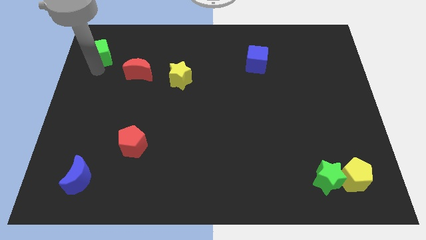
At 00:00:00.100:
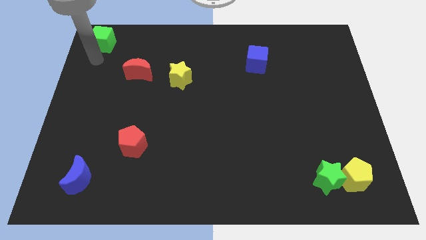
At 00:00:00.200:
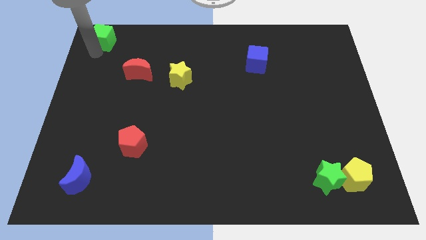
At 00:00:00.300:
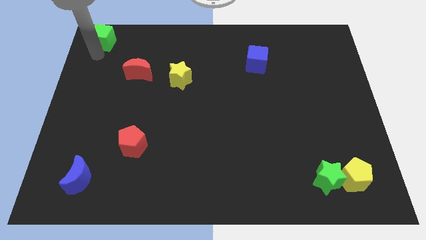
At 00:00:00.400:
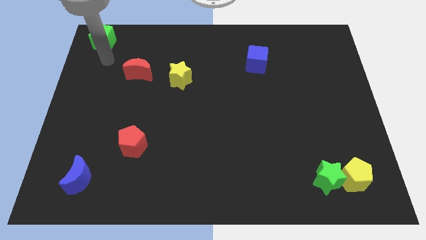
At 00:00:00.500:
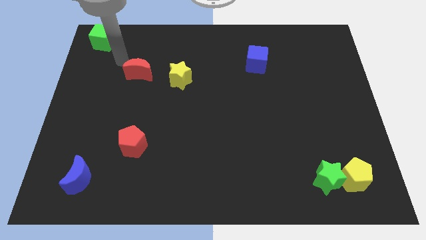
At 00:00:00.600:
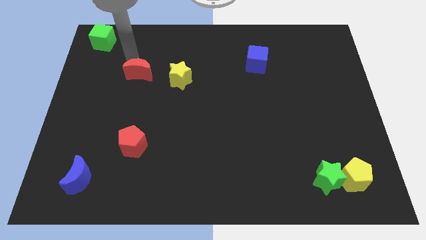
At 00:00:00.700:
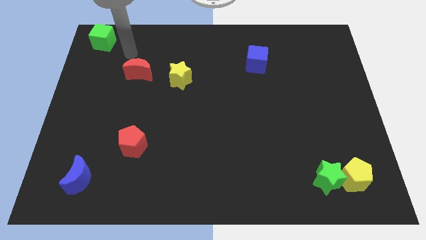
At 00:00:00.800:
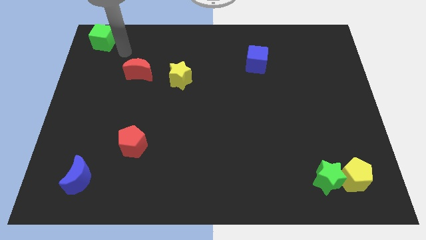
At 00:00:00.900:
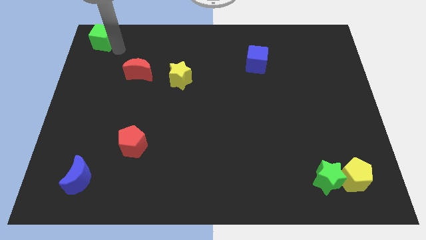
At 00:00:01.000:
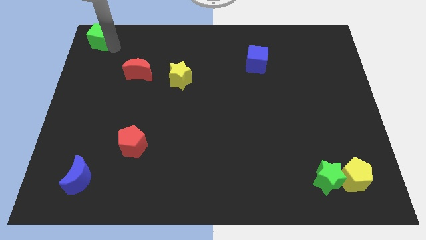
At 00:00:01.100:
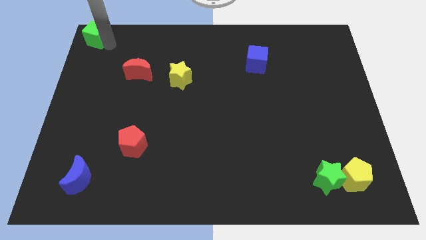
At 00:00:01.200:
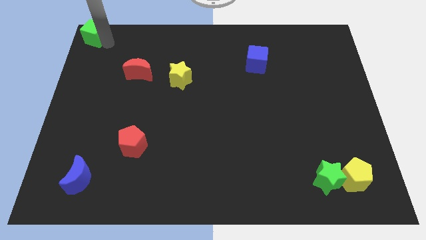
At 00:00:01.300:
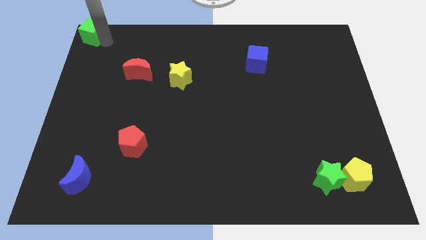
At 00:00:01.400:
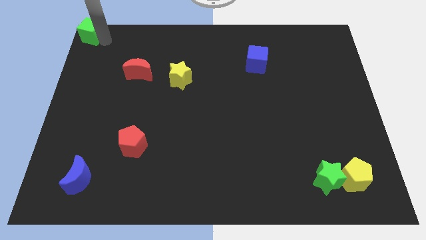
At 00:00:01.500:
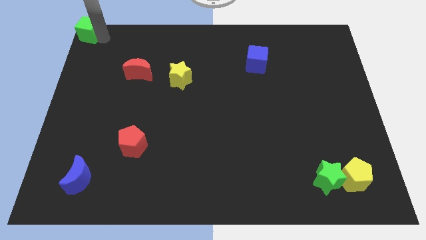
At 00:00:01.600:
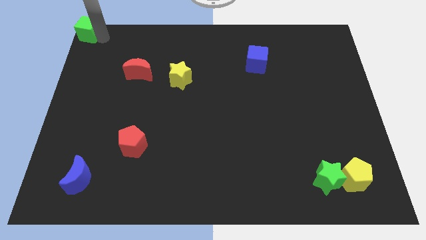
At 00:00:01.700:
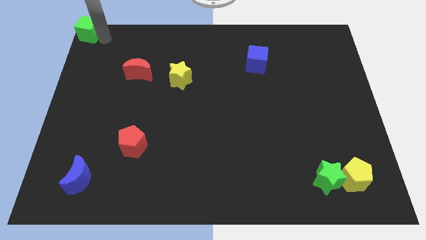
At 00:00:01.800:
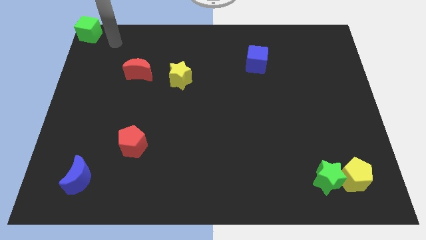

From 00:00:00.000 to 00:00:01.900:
move the green cube to the top left corner of the board

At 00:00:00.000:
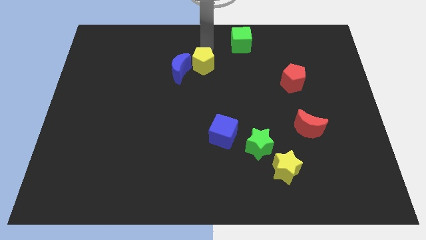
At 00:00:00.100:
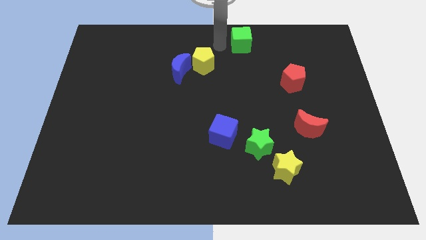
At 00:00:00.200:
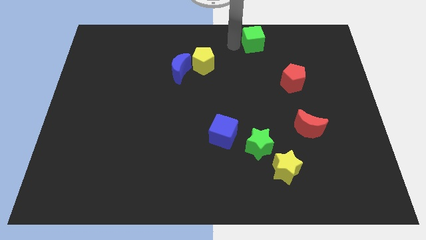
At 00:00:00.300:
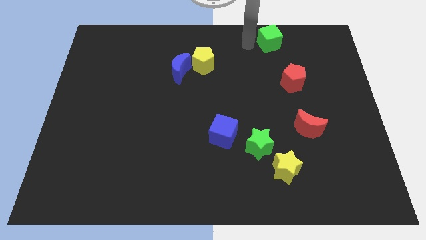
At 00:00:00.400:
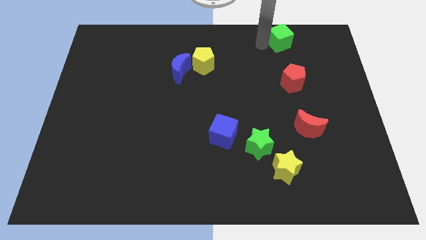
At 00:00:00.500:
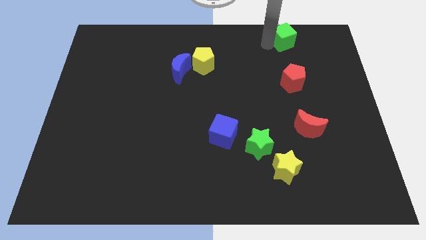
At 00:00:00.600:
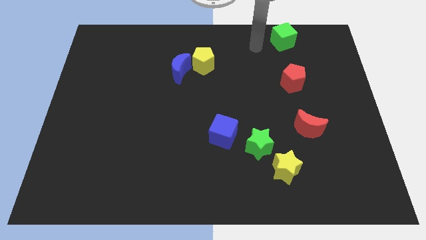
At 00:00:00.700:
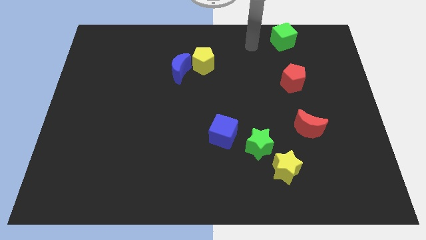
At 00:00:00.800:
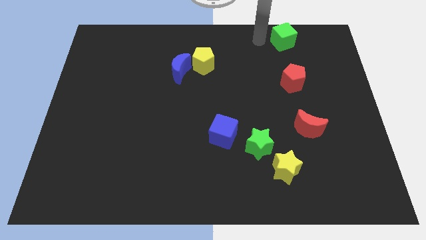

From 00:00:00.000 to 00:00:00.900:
place green cube vertically above the red pentagon

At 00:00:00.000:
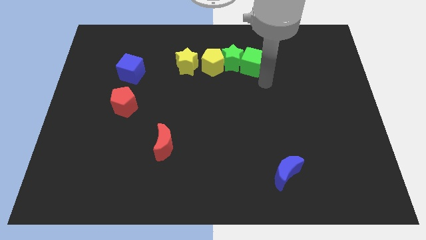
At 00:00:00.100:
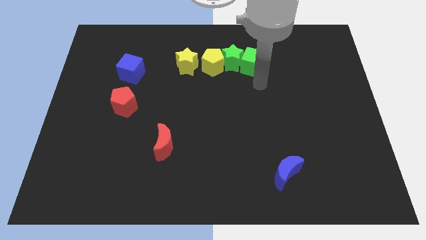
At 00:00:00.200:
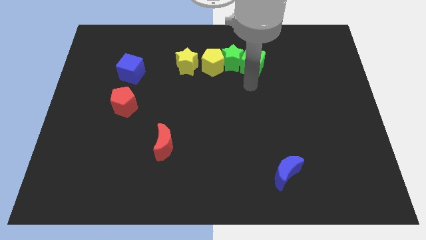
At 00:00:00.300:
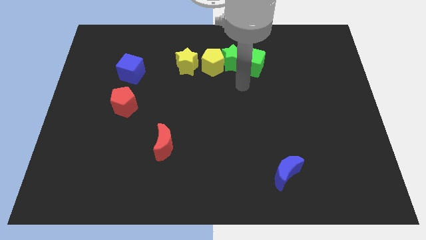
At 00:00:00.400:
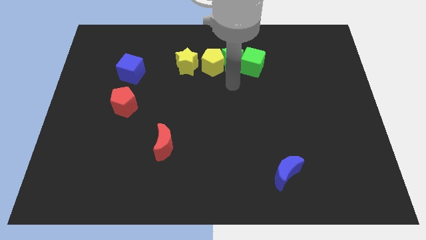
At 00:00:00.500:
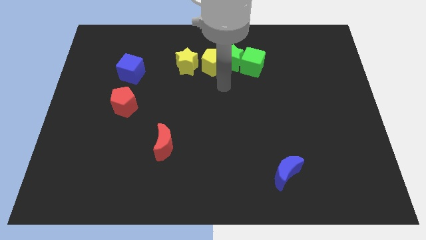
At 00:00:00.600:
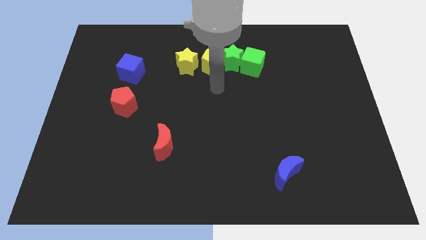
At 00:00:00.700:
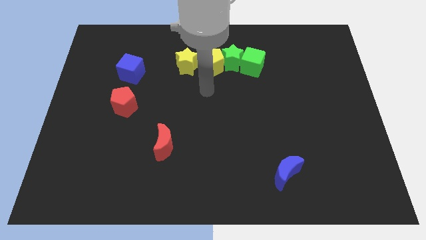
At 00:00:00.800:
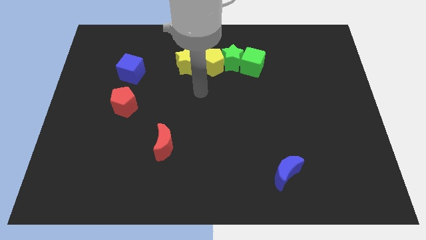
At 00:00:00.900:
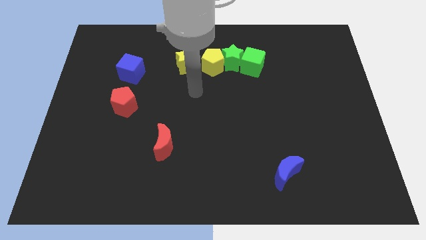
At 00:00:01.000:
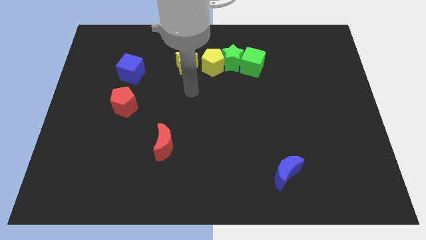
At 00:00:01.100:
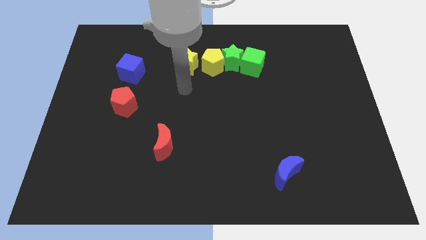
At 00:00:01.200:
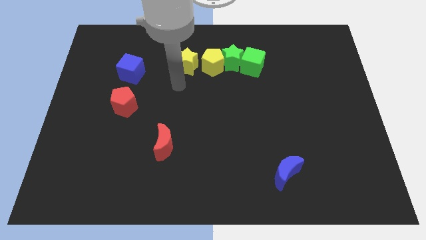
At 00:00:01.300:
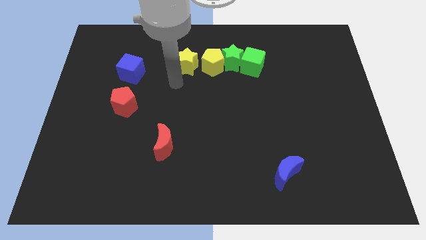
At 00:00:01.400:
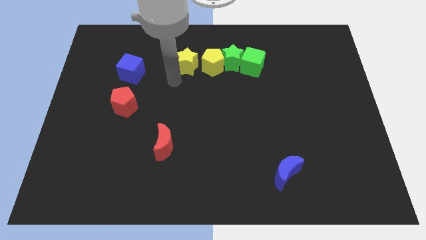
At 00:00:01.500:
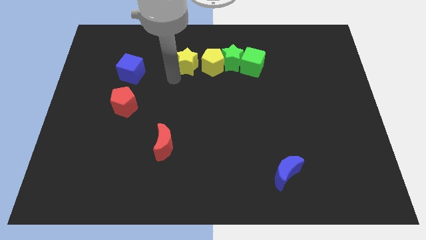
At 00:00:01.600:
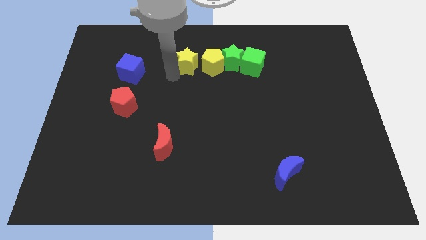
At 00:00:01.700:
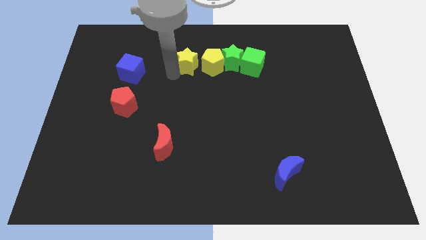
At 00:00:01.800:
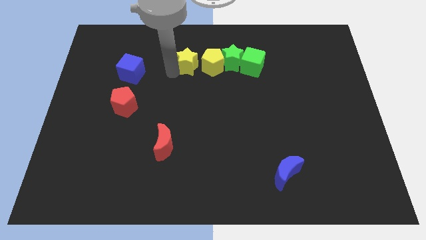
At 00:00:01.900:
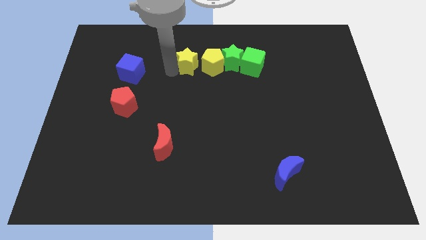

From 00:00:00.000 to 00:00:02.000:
move your arm away from the green cube

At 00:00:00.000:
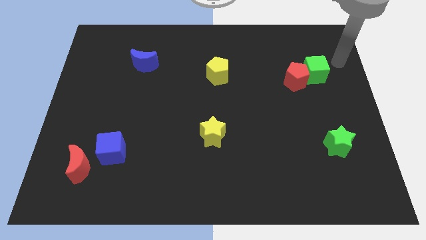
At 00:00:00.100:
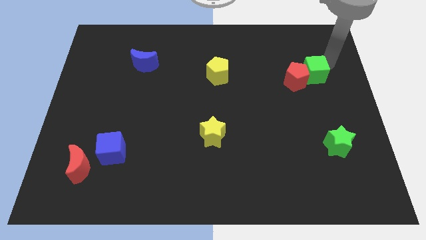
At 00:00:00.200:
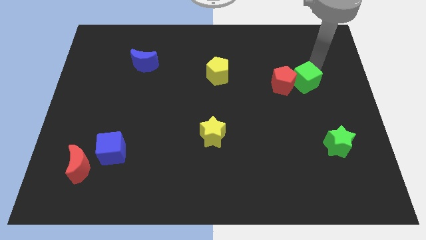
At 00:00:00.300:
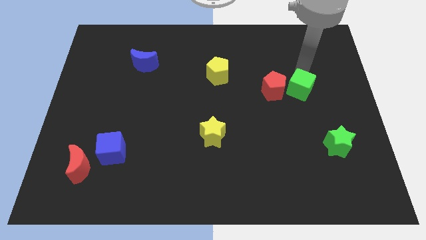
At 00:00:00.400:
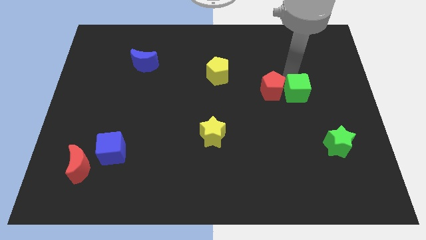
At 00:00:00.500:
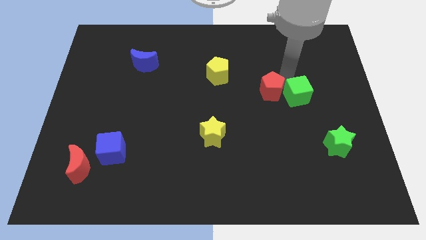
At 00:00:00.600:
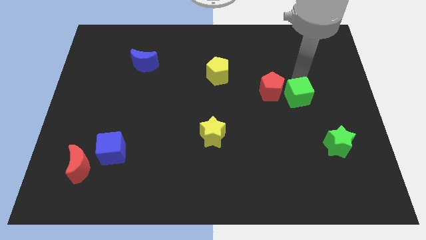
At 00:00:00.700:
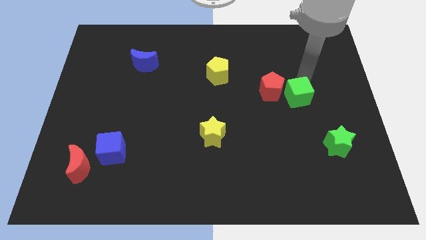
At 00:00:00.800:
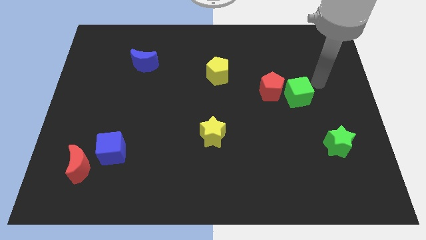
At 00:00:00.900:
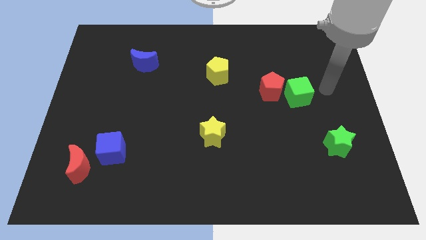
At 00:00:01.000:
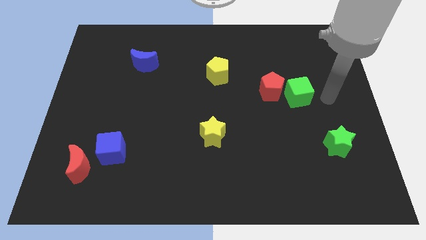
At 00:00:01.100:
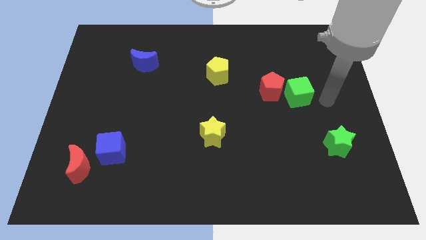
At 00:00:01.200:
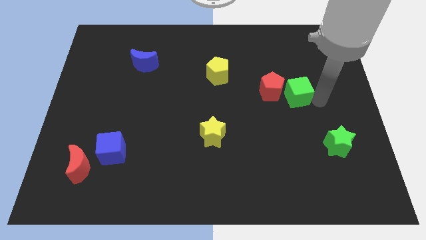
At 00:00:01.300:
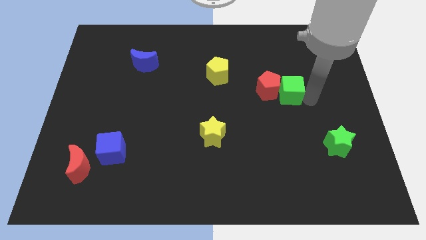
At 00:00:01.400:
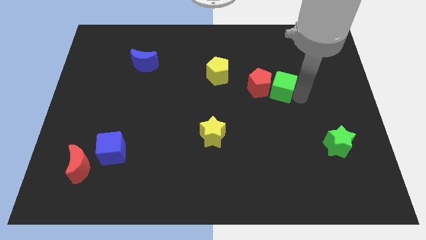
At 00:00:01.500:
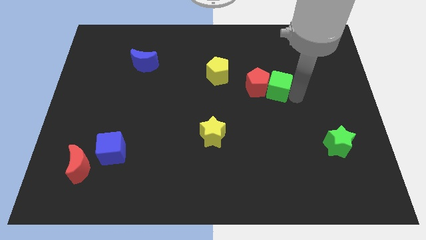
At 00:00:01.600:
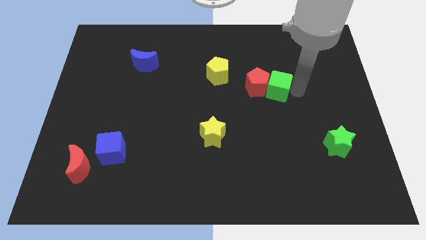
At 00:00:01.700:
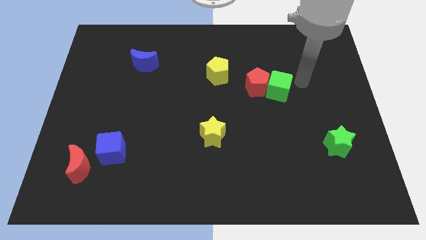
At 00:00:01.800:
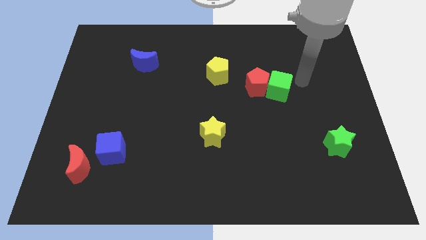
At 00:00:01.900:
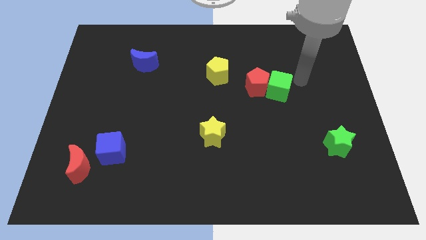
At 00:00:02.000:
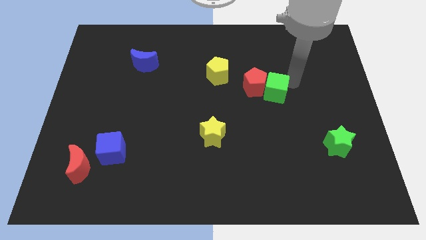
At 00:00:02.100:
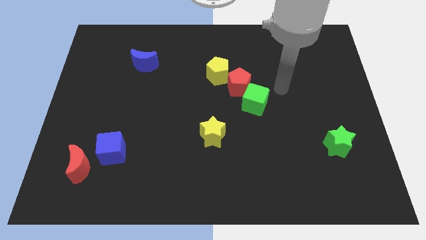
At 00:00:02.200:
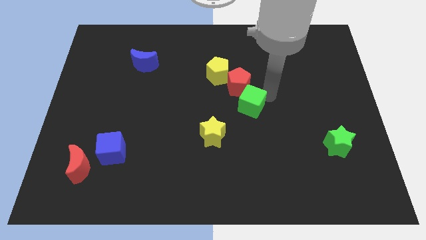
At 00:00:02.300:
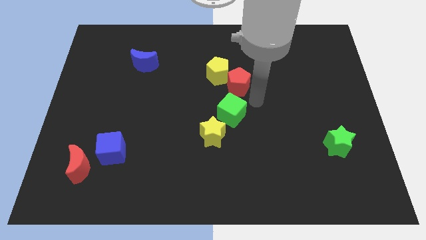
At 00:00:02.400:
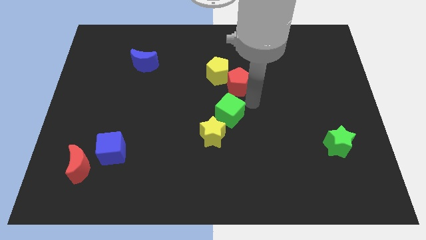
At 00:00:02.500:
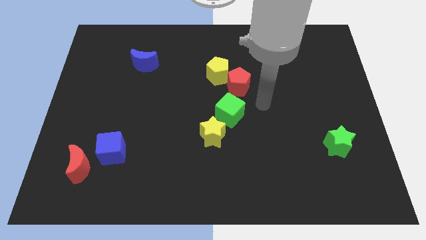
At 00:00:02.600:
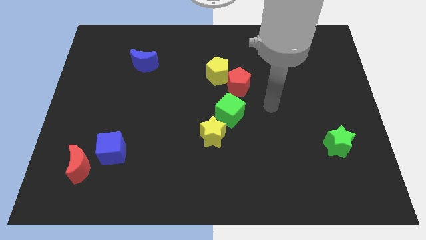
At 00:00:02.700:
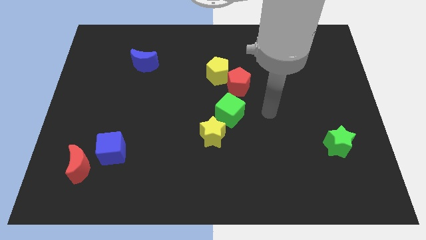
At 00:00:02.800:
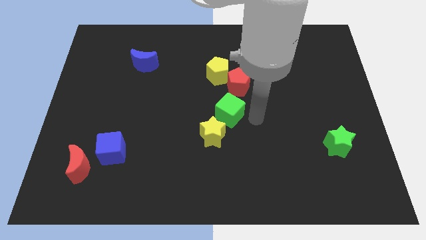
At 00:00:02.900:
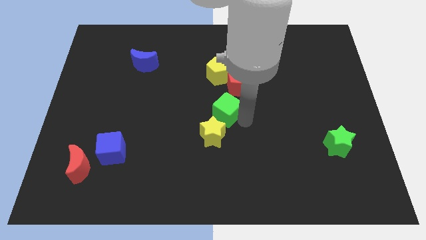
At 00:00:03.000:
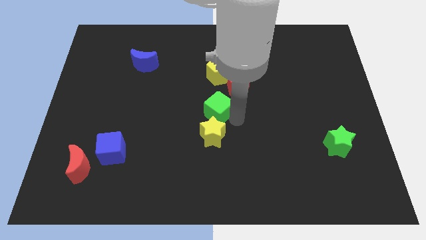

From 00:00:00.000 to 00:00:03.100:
push green cube above yellow star

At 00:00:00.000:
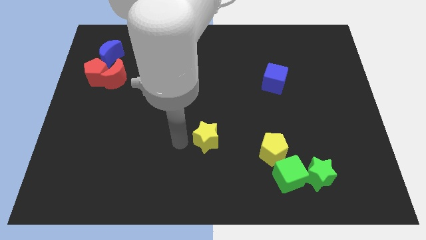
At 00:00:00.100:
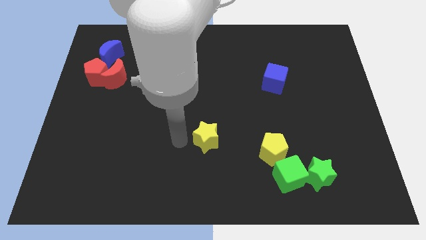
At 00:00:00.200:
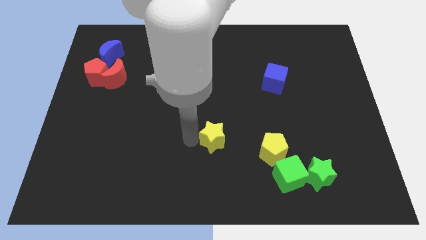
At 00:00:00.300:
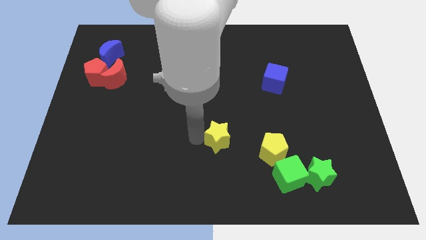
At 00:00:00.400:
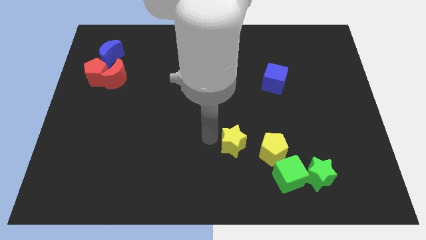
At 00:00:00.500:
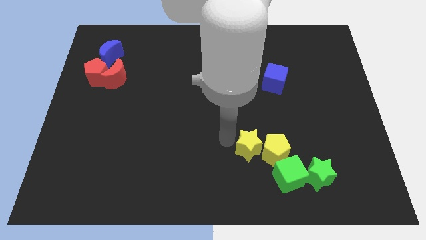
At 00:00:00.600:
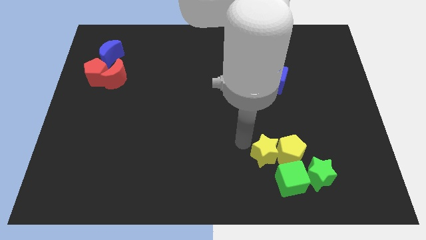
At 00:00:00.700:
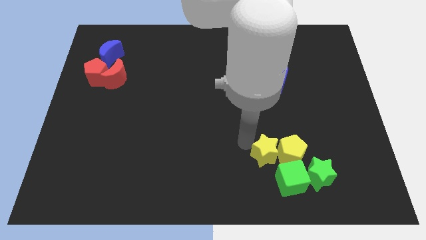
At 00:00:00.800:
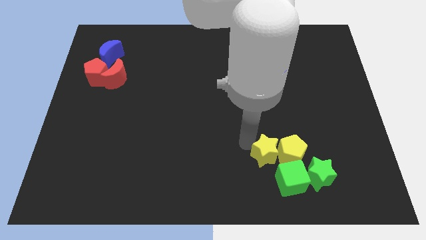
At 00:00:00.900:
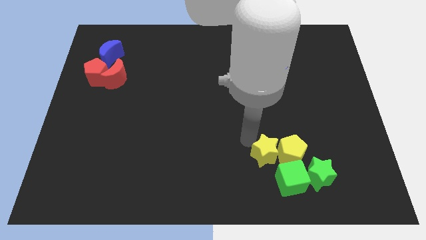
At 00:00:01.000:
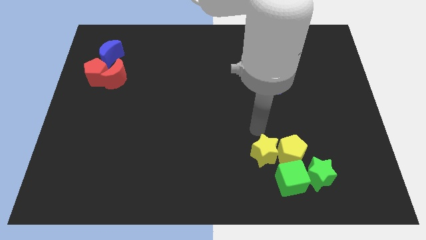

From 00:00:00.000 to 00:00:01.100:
push yellow star into yellow pentagon
